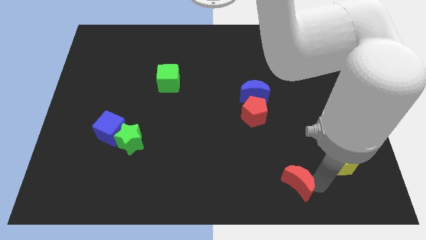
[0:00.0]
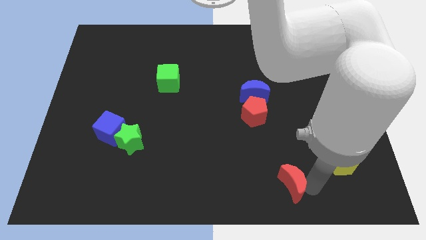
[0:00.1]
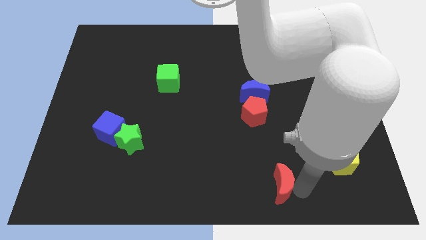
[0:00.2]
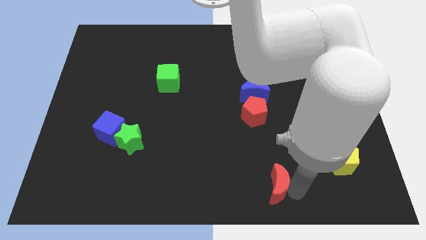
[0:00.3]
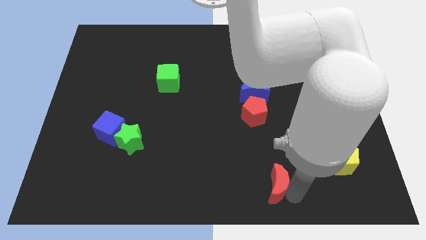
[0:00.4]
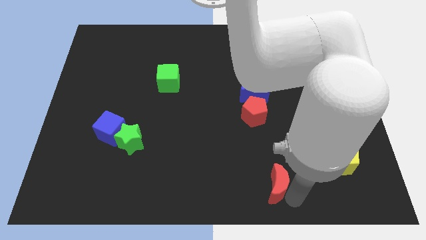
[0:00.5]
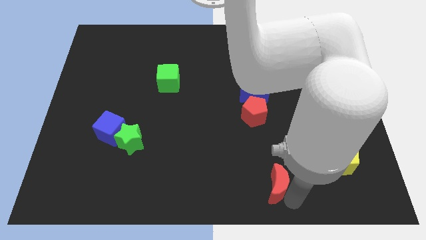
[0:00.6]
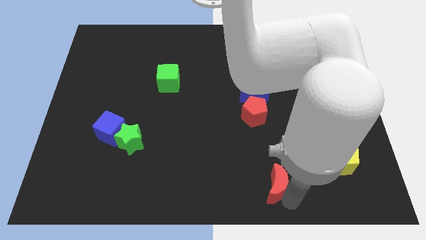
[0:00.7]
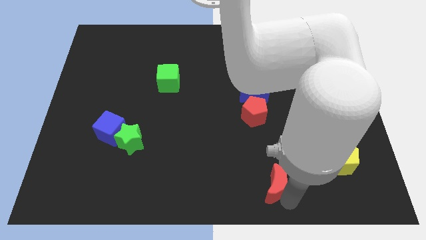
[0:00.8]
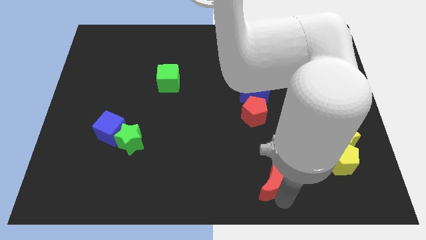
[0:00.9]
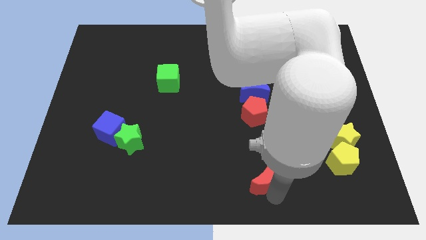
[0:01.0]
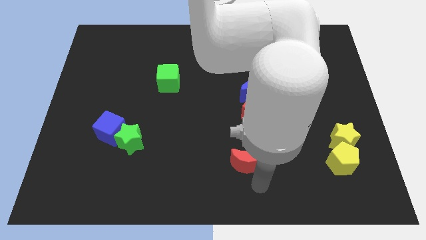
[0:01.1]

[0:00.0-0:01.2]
move red moon slightly upwards

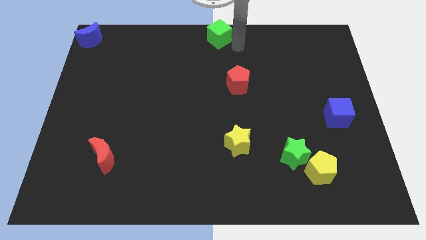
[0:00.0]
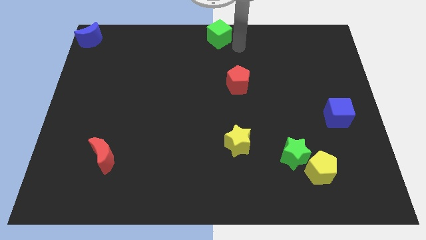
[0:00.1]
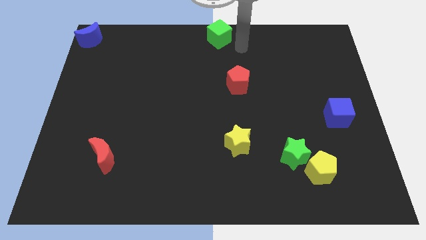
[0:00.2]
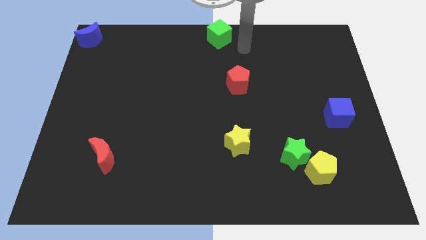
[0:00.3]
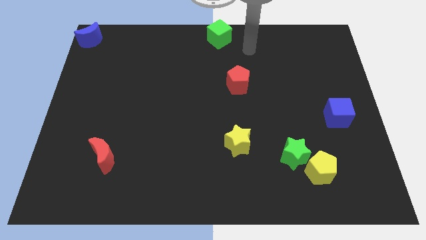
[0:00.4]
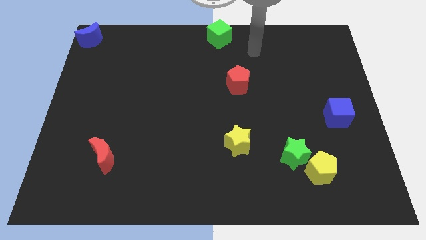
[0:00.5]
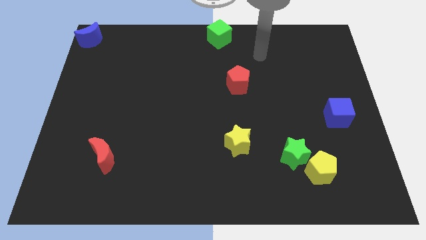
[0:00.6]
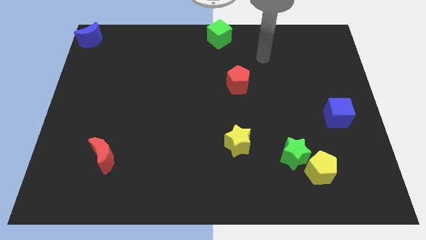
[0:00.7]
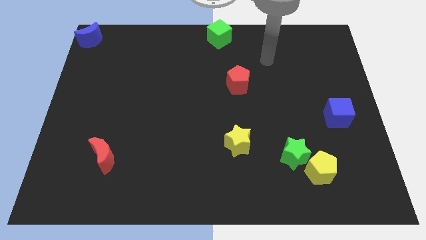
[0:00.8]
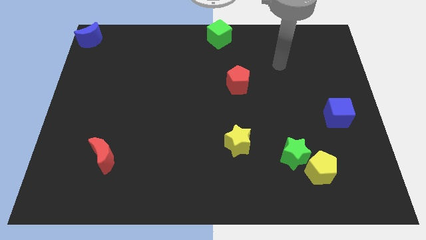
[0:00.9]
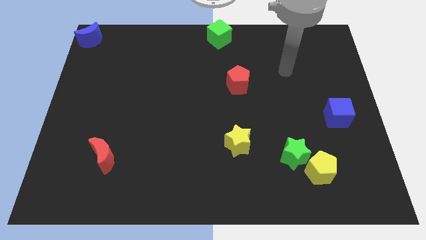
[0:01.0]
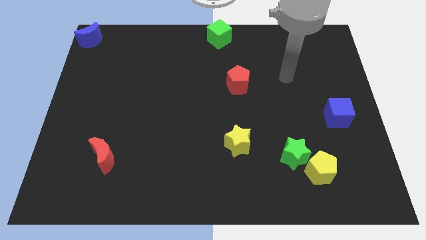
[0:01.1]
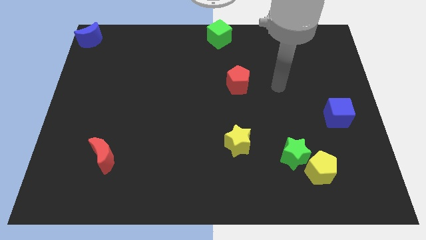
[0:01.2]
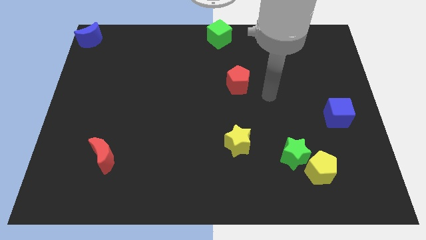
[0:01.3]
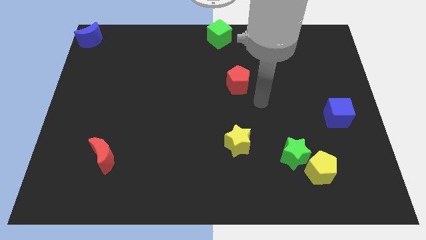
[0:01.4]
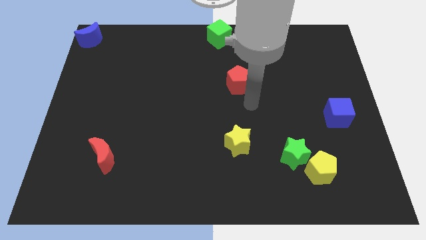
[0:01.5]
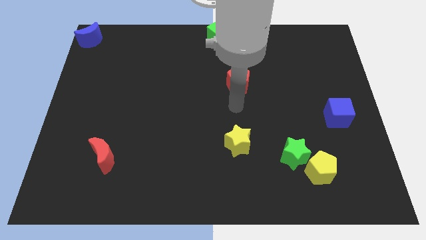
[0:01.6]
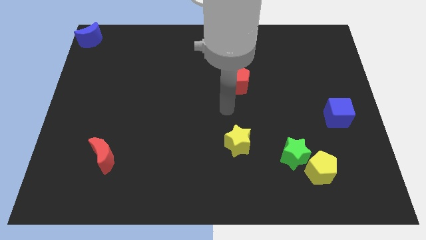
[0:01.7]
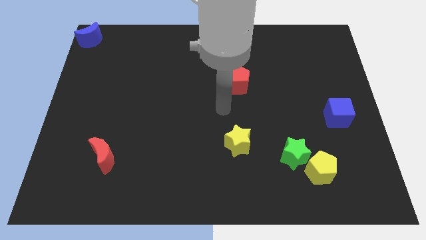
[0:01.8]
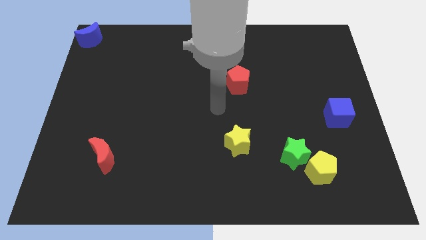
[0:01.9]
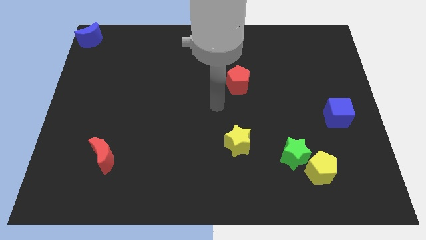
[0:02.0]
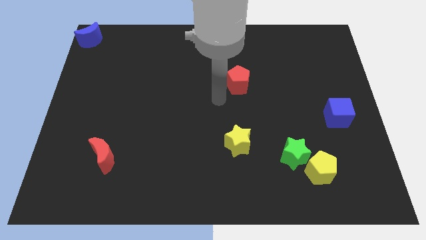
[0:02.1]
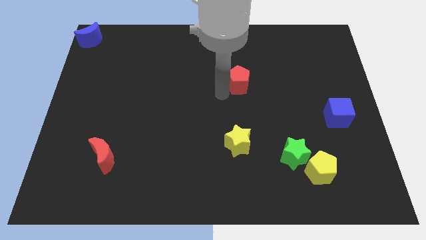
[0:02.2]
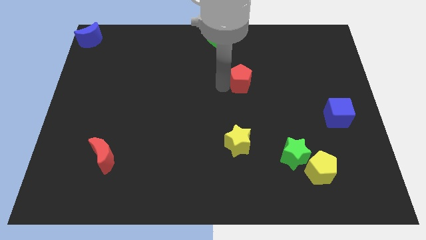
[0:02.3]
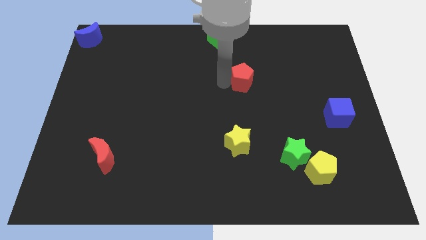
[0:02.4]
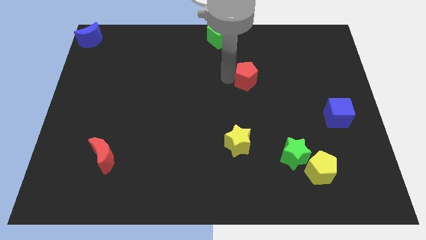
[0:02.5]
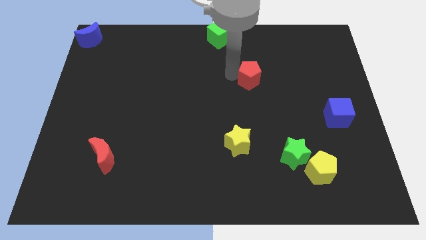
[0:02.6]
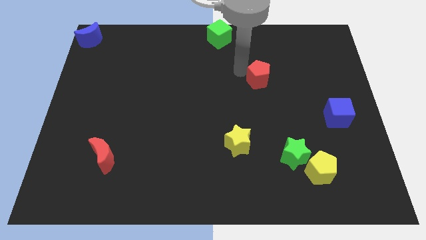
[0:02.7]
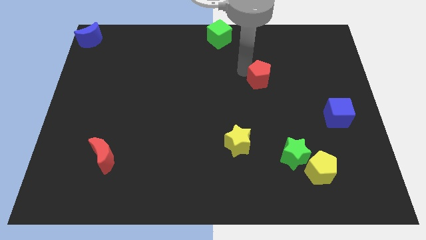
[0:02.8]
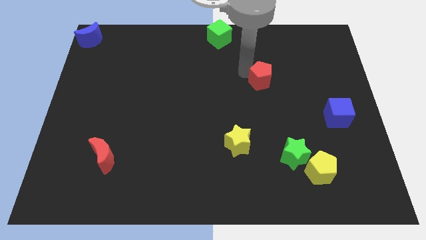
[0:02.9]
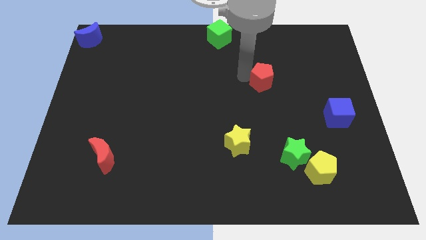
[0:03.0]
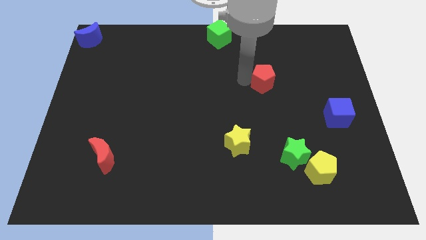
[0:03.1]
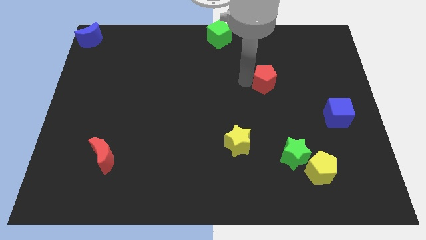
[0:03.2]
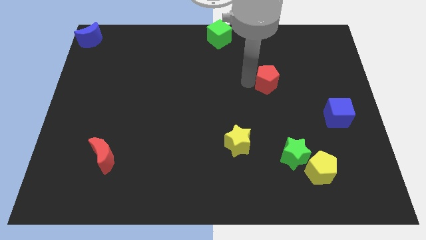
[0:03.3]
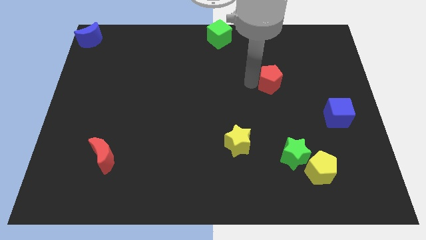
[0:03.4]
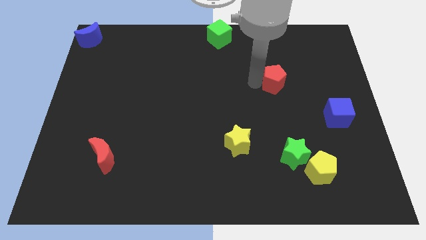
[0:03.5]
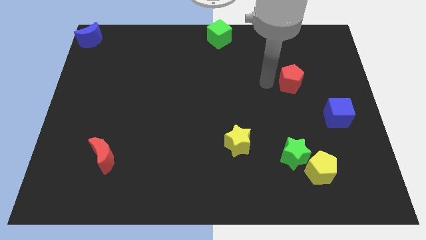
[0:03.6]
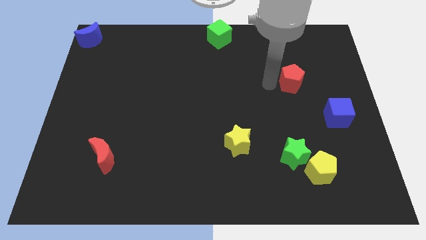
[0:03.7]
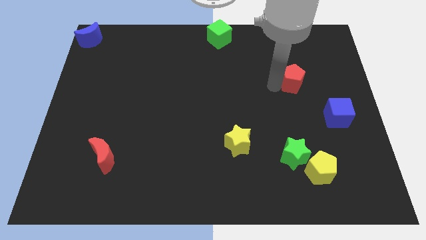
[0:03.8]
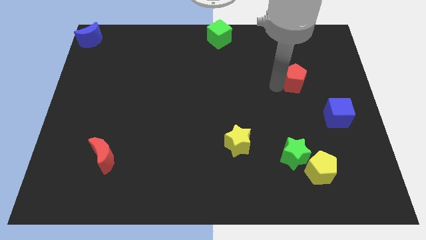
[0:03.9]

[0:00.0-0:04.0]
move the red pentagon vertical above green star

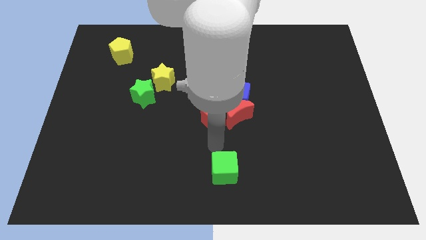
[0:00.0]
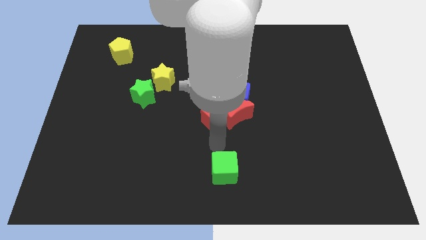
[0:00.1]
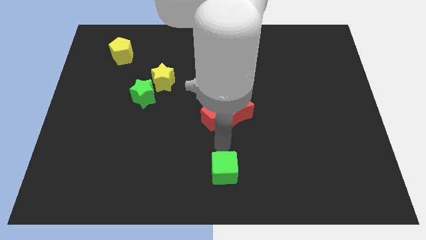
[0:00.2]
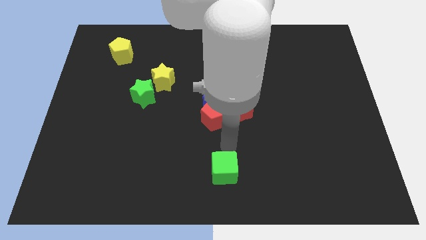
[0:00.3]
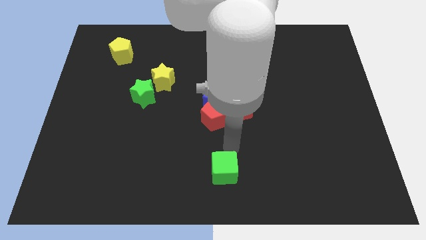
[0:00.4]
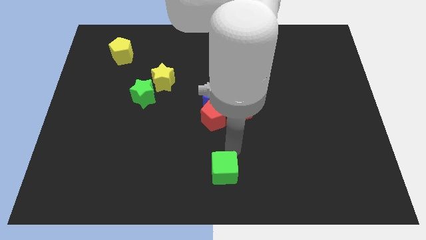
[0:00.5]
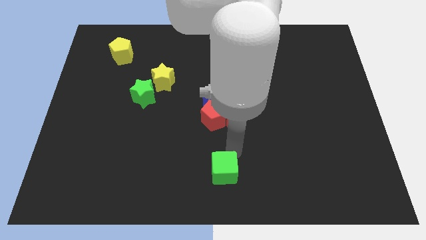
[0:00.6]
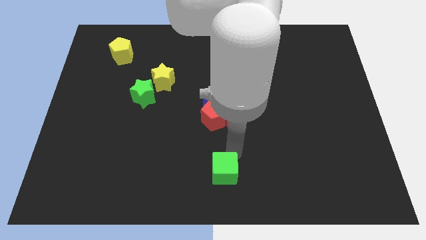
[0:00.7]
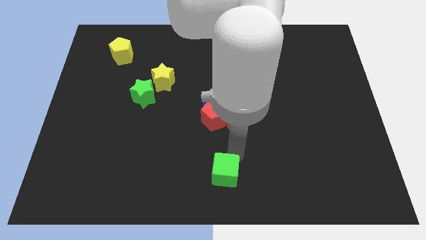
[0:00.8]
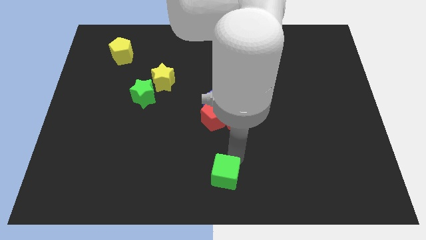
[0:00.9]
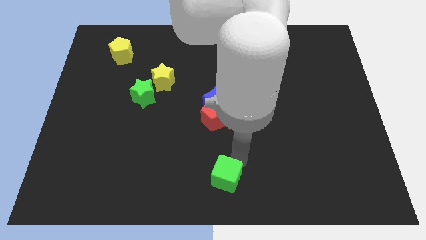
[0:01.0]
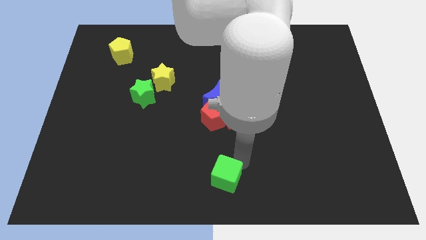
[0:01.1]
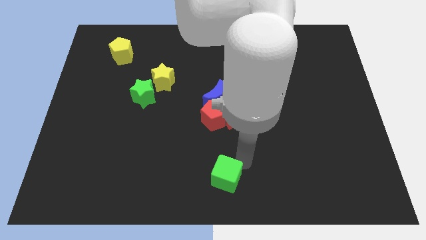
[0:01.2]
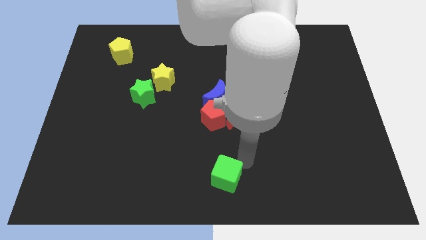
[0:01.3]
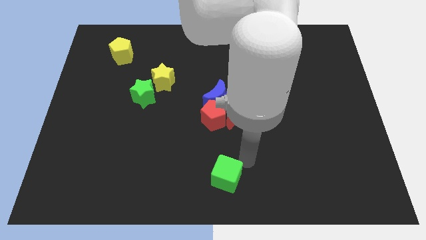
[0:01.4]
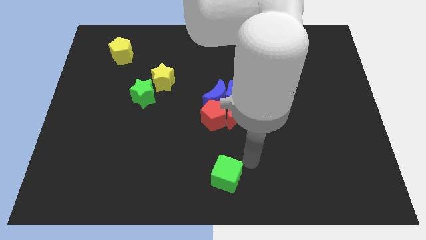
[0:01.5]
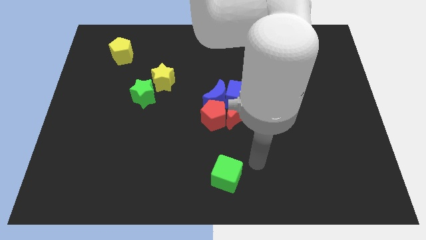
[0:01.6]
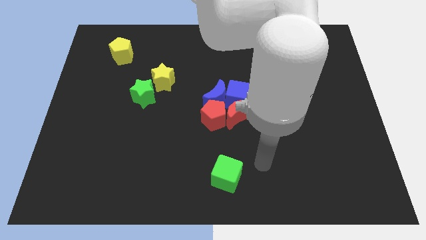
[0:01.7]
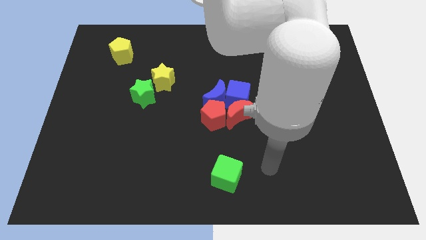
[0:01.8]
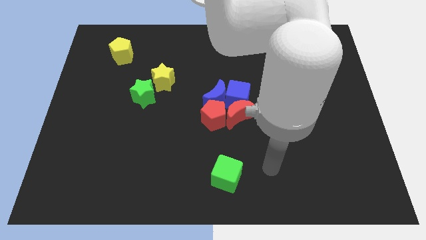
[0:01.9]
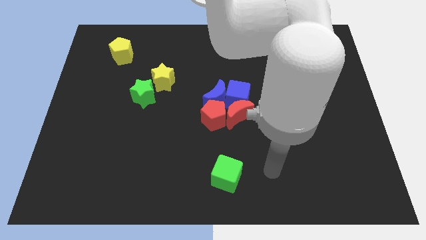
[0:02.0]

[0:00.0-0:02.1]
slide the green cube slightly to the bottom side of the board

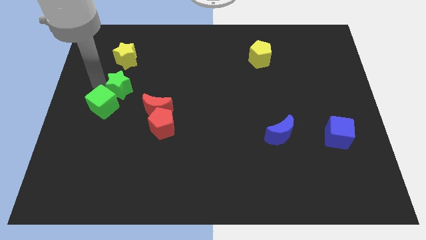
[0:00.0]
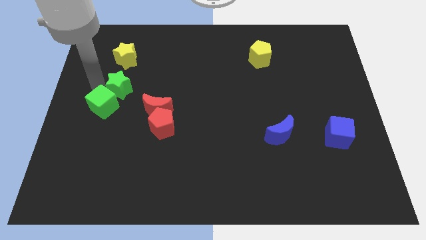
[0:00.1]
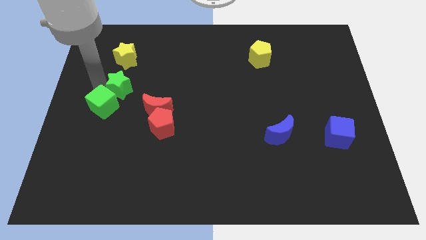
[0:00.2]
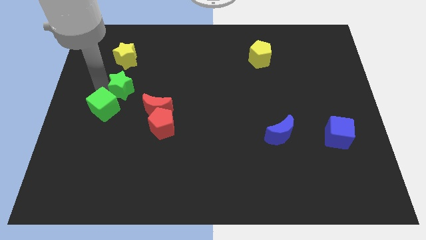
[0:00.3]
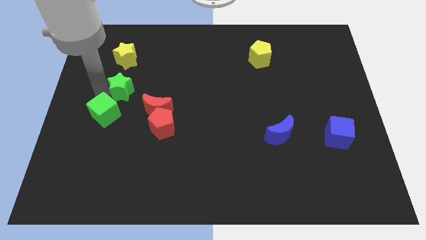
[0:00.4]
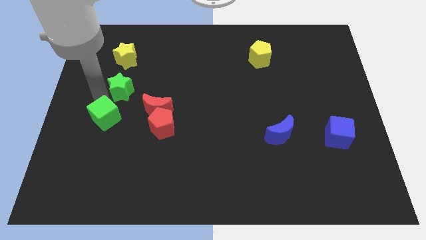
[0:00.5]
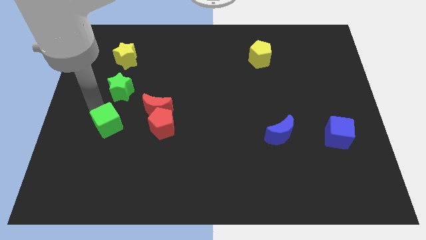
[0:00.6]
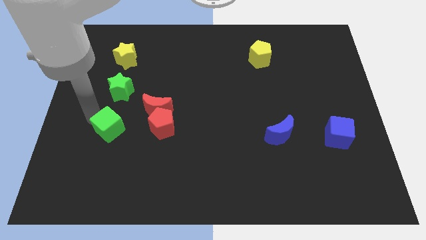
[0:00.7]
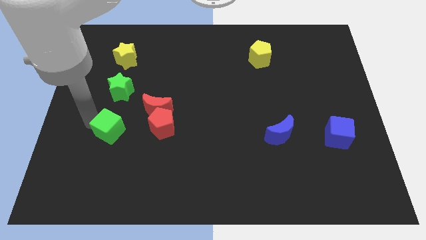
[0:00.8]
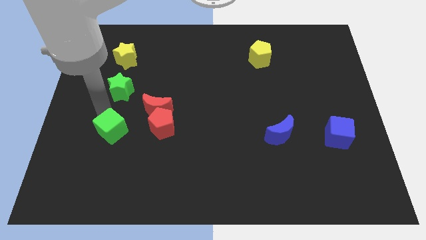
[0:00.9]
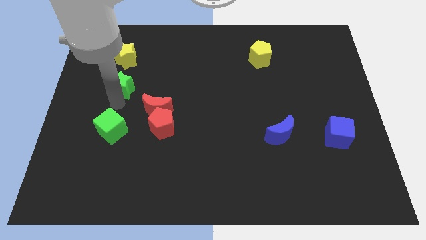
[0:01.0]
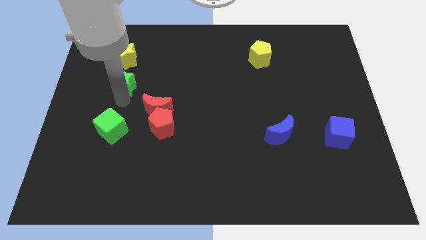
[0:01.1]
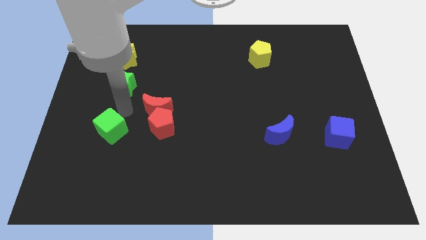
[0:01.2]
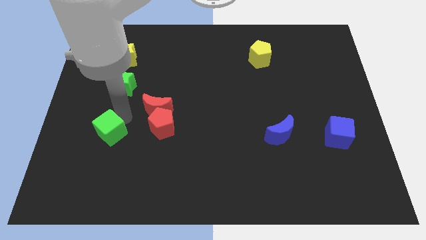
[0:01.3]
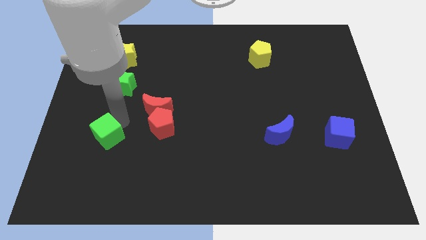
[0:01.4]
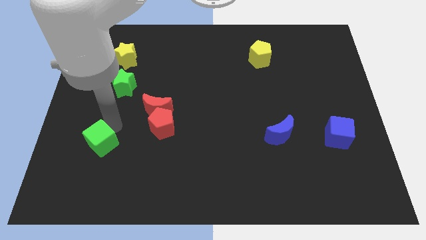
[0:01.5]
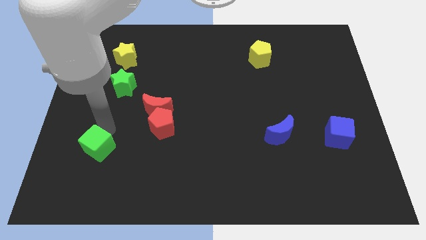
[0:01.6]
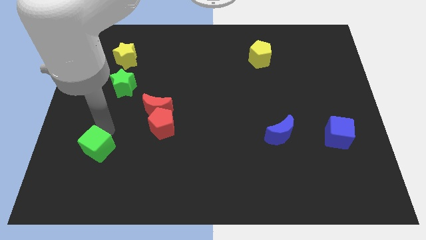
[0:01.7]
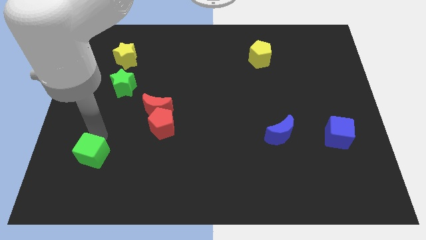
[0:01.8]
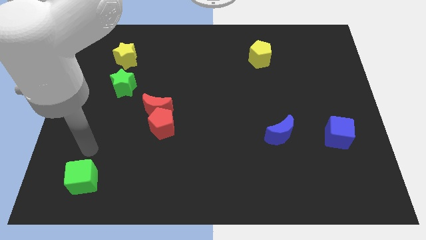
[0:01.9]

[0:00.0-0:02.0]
seperate the green star and green cube
